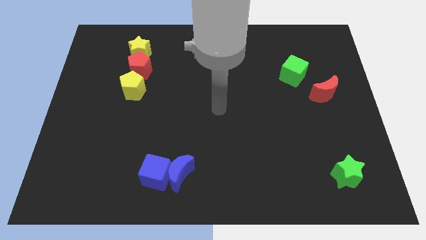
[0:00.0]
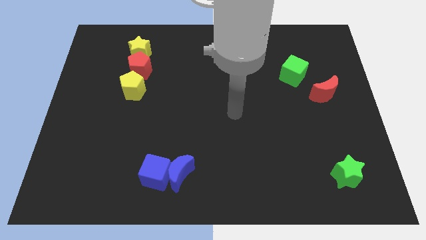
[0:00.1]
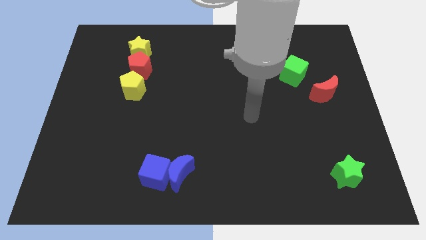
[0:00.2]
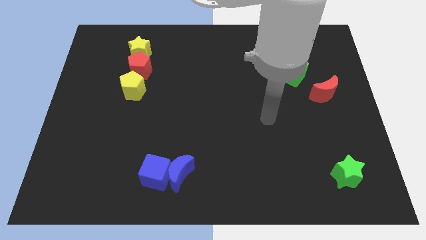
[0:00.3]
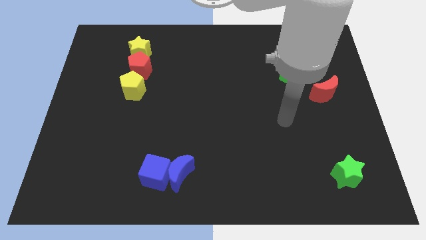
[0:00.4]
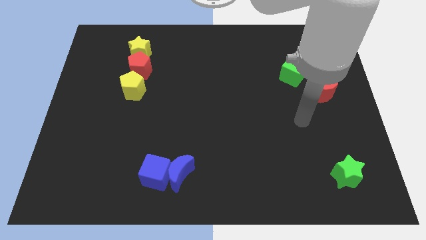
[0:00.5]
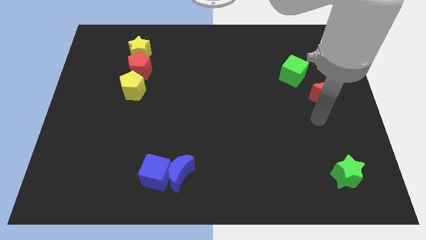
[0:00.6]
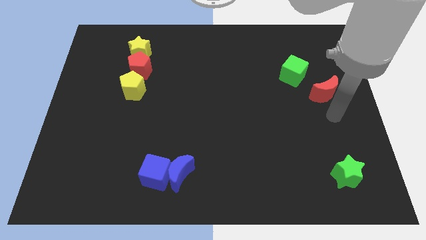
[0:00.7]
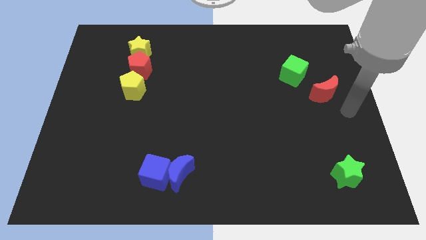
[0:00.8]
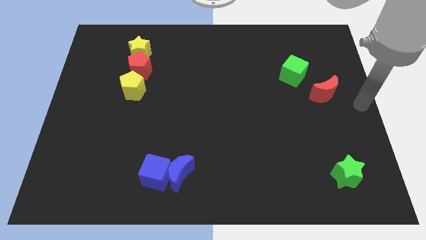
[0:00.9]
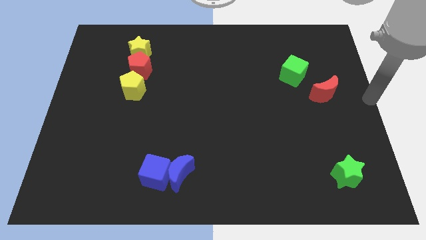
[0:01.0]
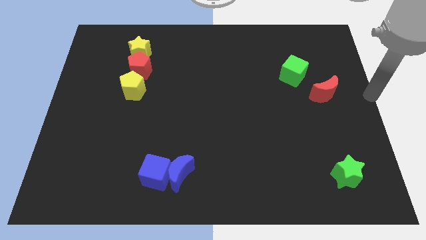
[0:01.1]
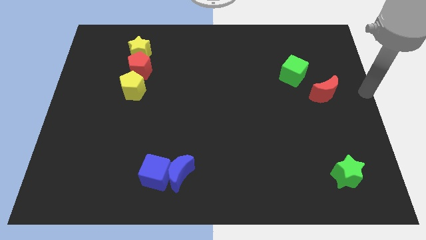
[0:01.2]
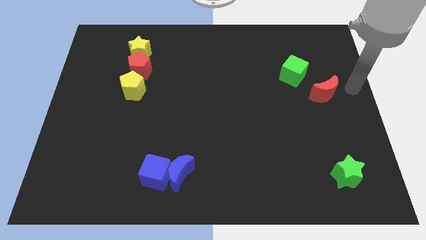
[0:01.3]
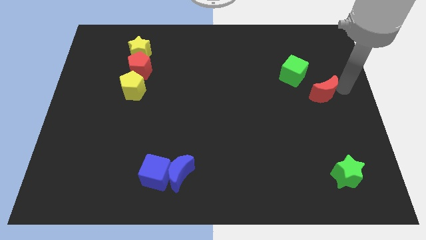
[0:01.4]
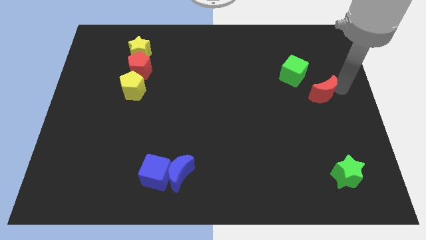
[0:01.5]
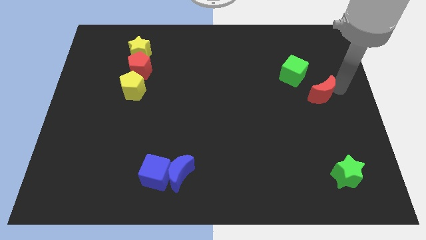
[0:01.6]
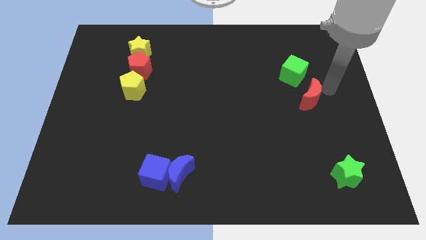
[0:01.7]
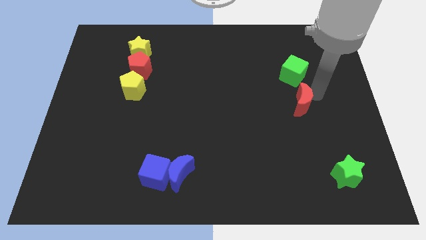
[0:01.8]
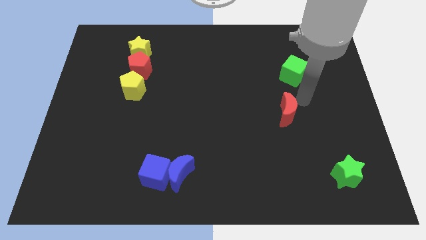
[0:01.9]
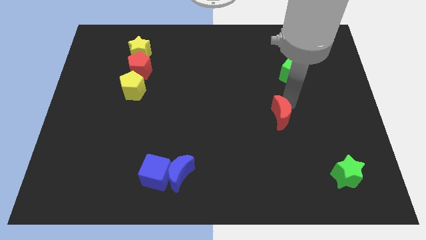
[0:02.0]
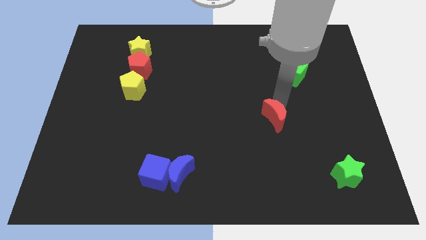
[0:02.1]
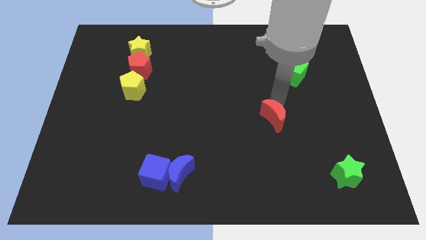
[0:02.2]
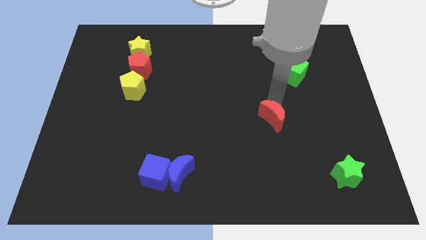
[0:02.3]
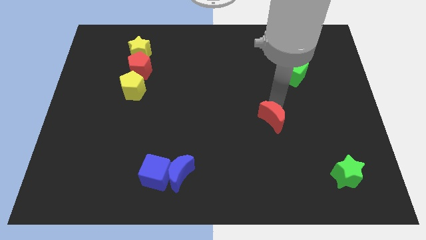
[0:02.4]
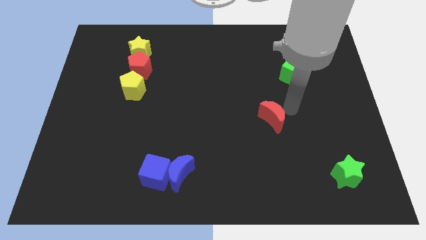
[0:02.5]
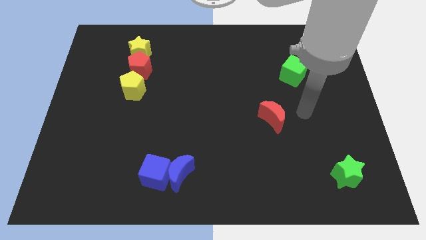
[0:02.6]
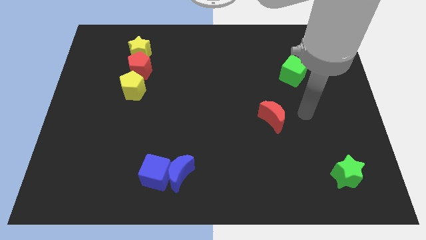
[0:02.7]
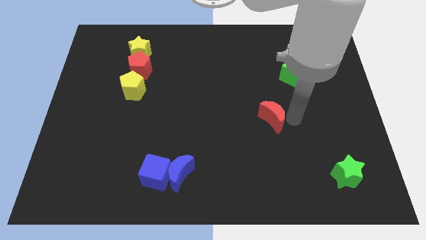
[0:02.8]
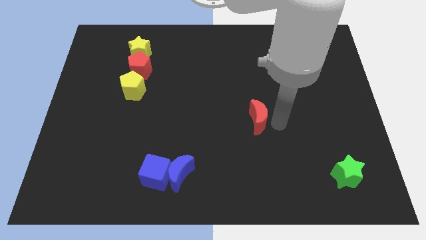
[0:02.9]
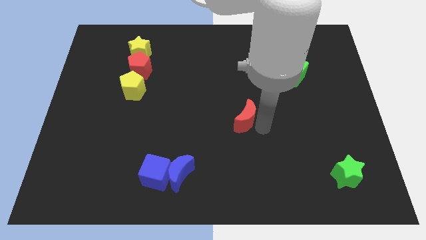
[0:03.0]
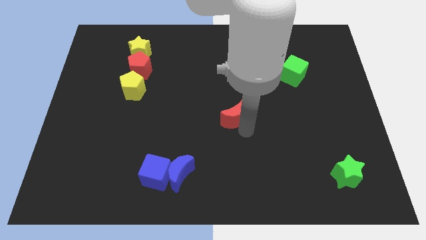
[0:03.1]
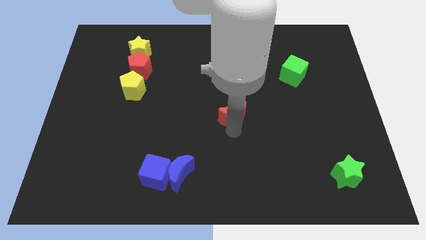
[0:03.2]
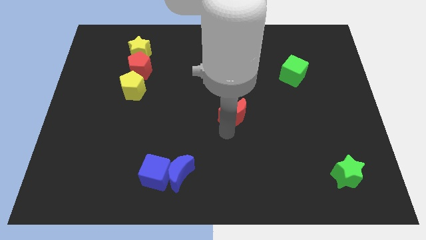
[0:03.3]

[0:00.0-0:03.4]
place red moon to the center of the board

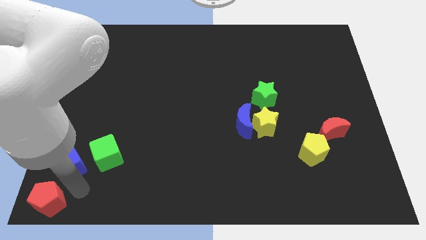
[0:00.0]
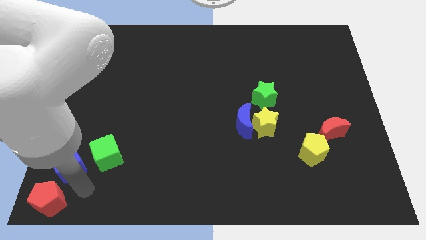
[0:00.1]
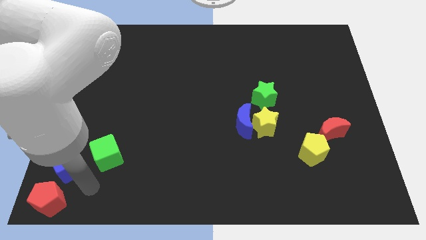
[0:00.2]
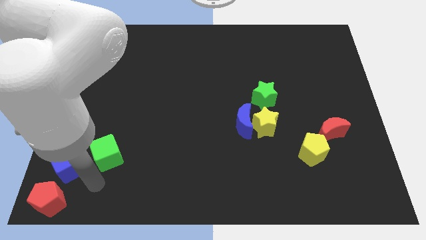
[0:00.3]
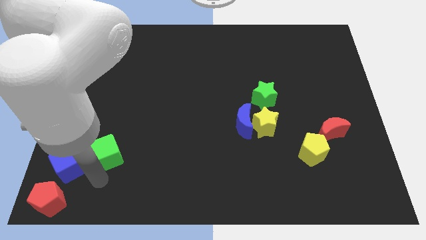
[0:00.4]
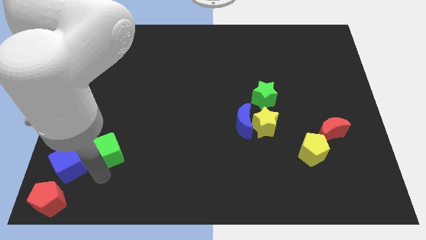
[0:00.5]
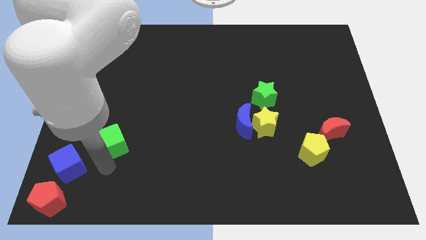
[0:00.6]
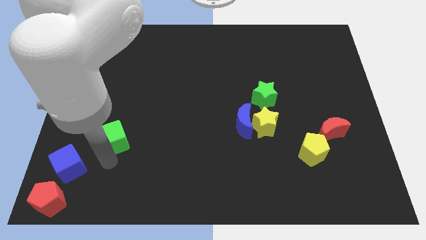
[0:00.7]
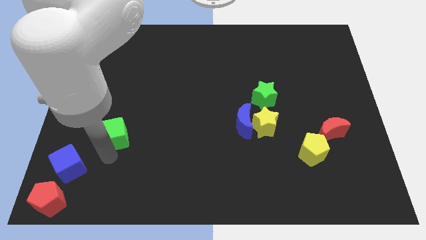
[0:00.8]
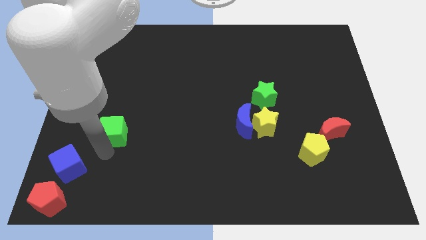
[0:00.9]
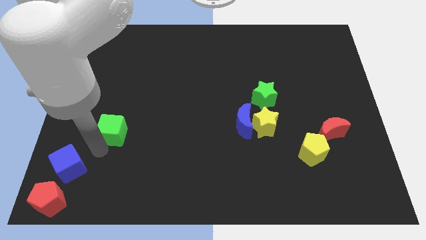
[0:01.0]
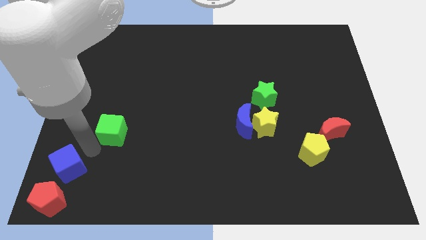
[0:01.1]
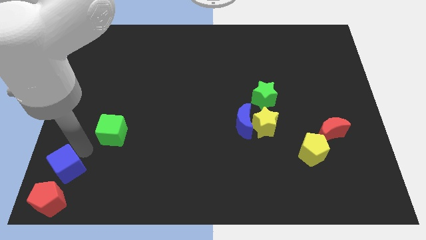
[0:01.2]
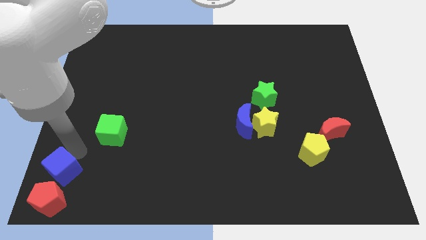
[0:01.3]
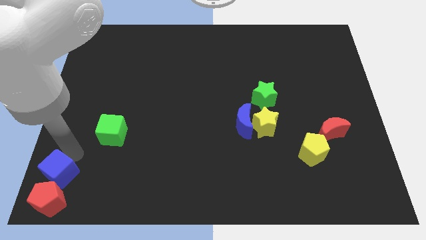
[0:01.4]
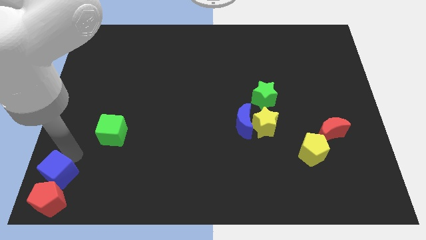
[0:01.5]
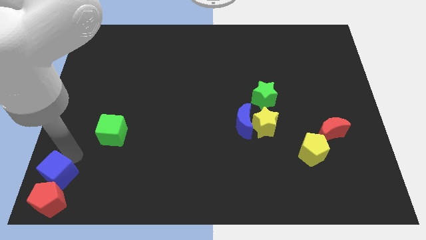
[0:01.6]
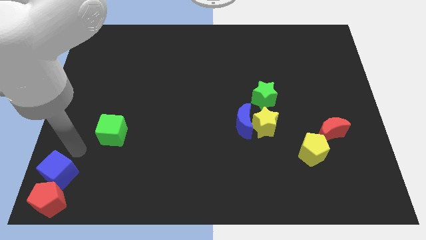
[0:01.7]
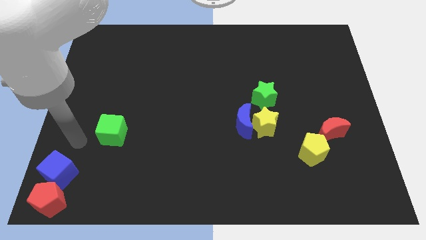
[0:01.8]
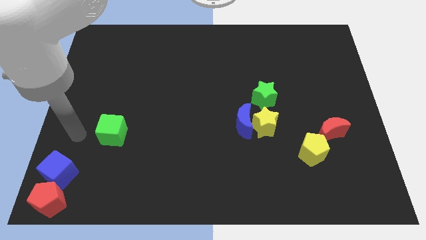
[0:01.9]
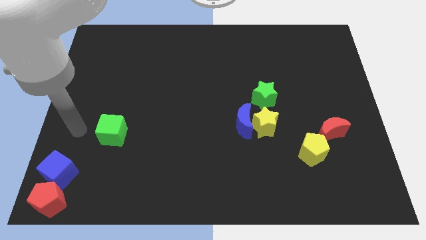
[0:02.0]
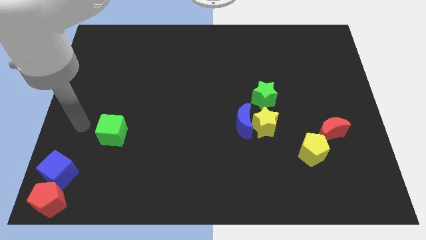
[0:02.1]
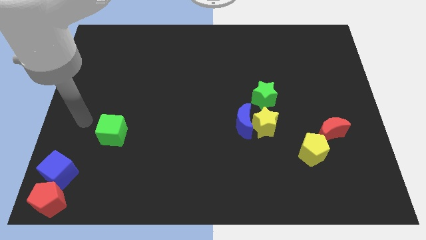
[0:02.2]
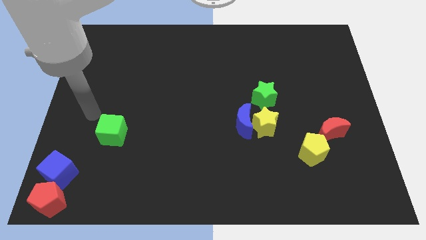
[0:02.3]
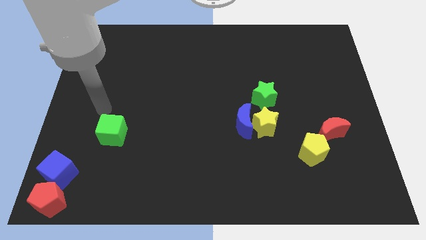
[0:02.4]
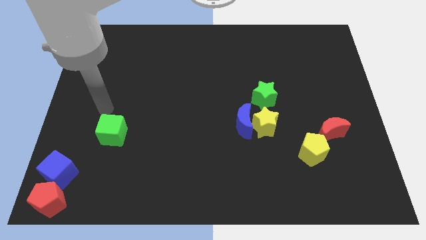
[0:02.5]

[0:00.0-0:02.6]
make the blue cube to touch the top side of the red pentagon

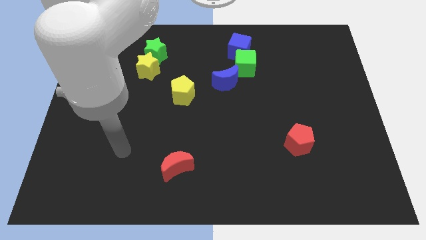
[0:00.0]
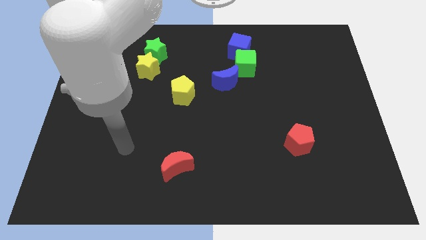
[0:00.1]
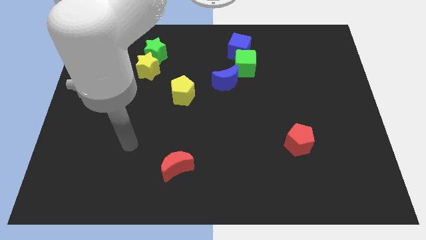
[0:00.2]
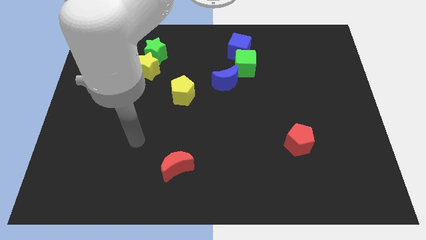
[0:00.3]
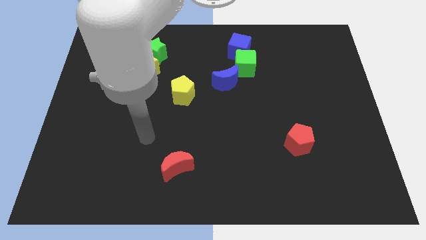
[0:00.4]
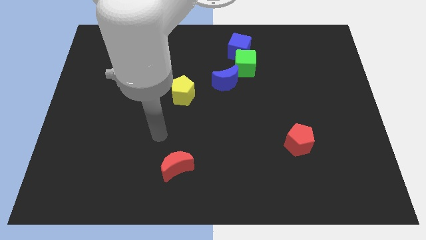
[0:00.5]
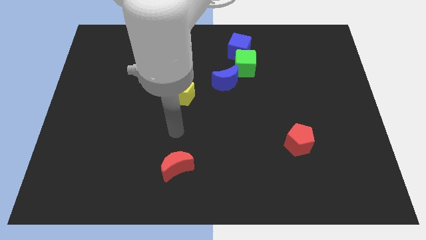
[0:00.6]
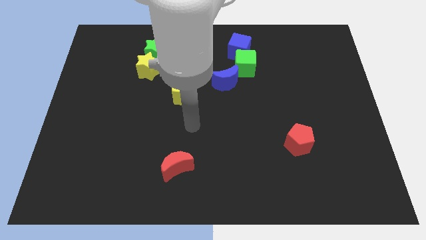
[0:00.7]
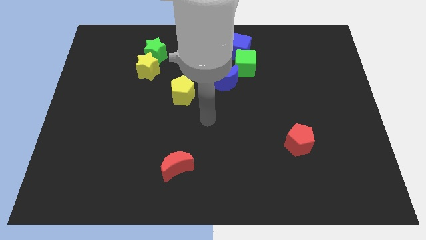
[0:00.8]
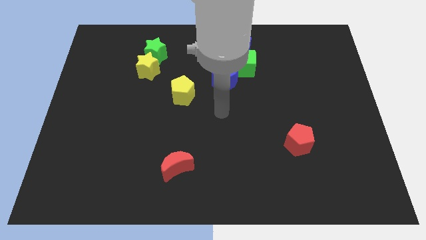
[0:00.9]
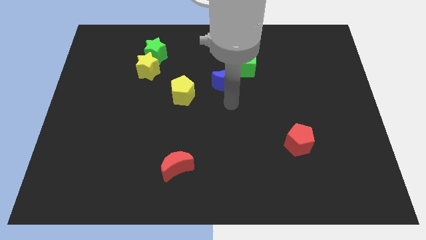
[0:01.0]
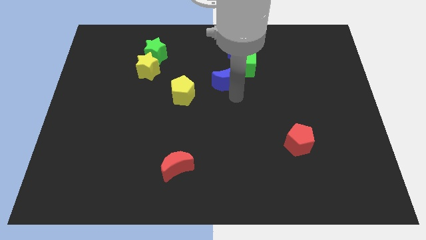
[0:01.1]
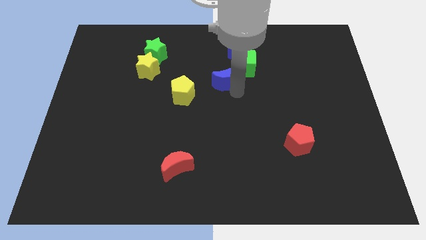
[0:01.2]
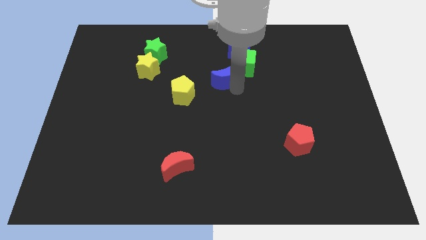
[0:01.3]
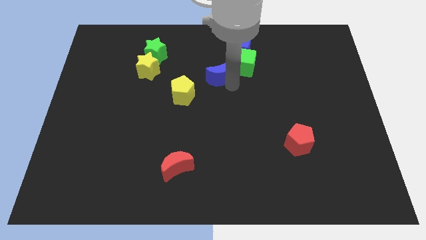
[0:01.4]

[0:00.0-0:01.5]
place the arm near the blue moon

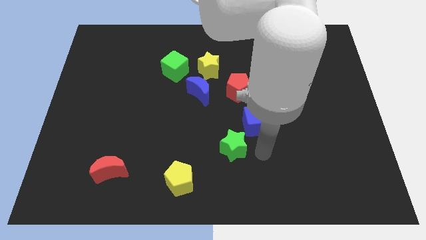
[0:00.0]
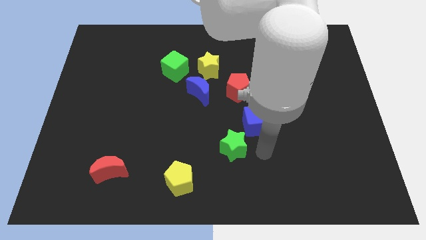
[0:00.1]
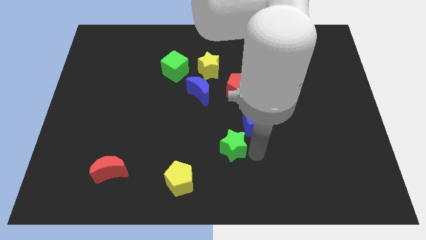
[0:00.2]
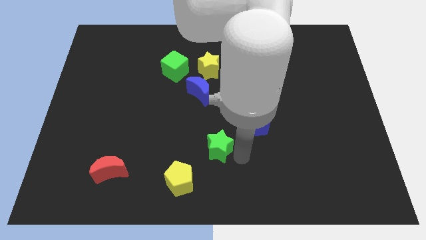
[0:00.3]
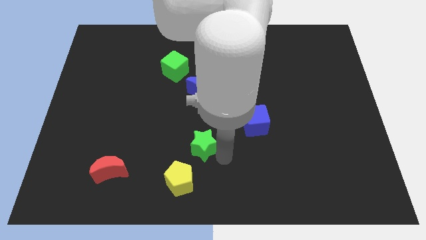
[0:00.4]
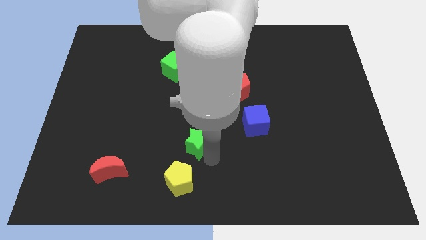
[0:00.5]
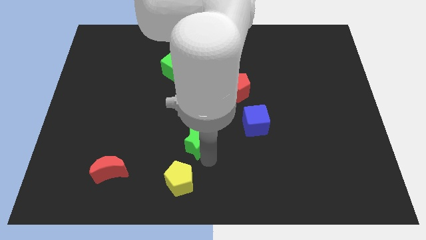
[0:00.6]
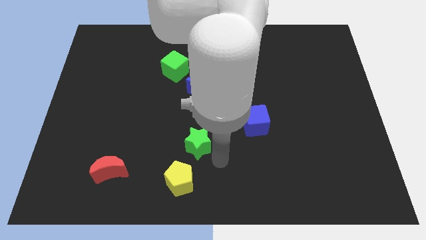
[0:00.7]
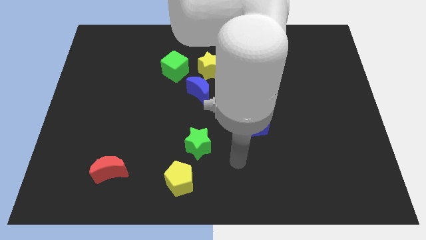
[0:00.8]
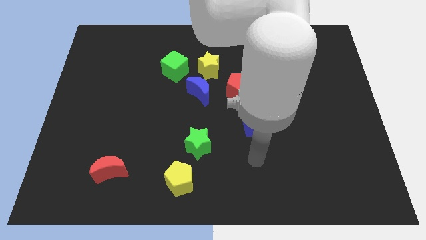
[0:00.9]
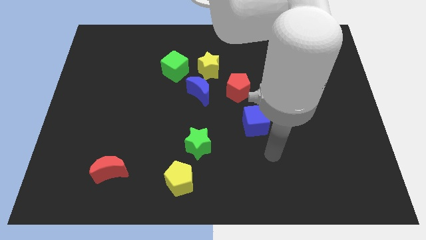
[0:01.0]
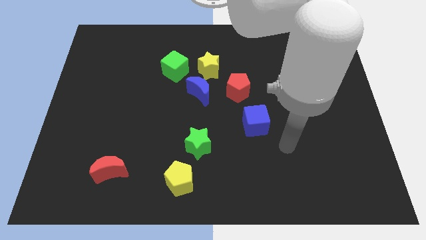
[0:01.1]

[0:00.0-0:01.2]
separate the green star and the blue cube

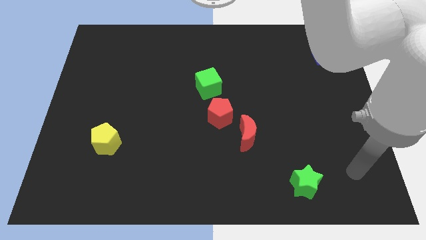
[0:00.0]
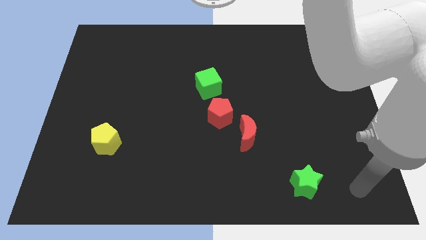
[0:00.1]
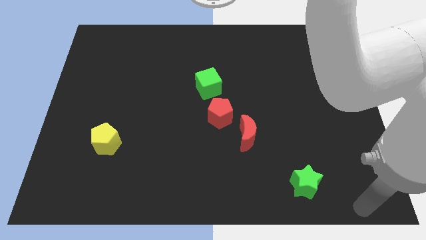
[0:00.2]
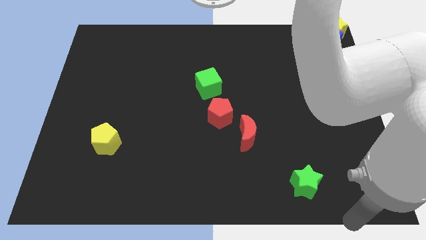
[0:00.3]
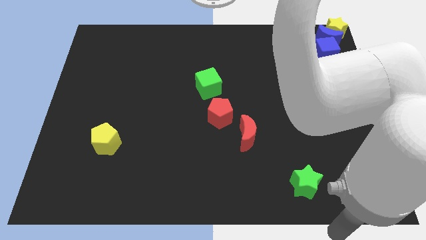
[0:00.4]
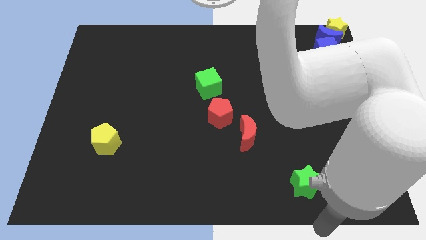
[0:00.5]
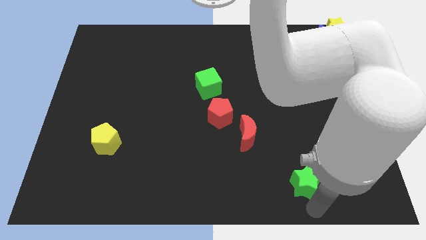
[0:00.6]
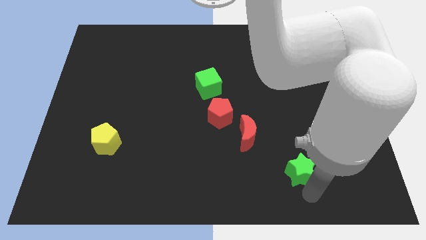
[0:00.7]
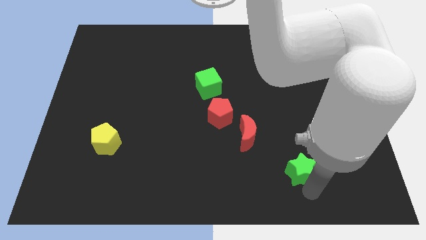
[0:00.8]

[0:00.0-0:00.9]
move your arm to the bottom of the green star
